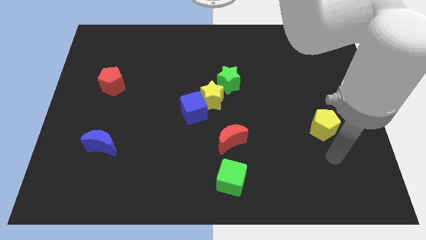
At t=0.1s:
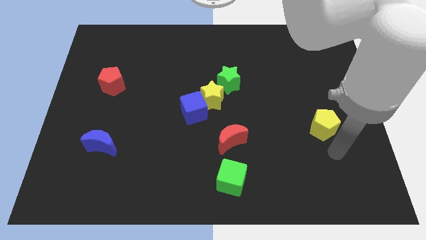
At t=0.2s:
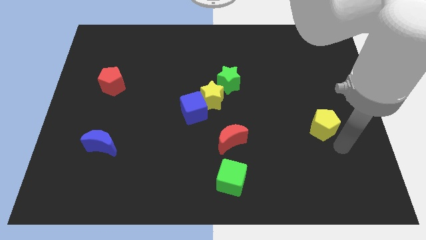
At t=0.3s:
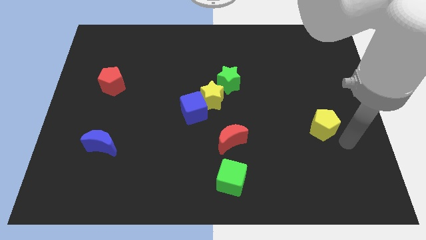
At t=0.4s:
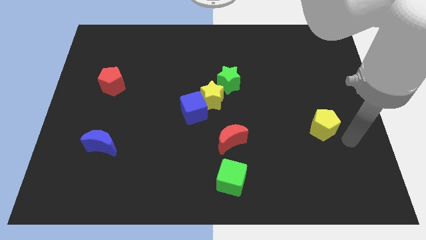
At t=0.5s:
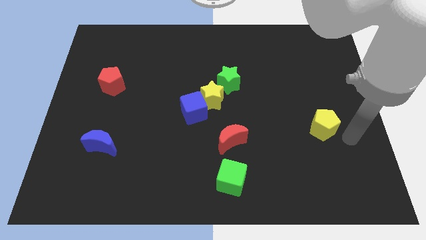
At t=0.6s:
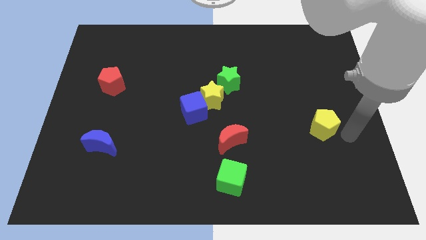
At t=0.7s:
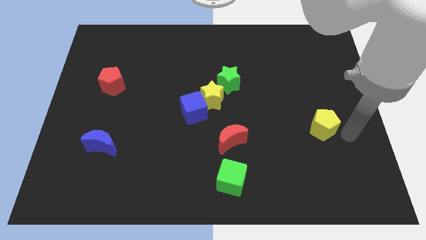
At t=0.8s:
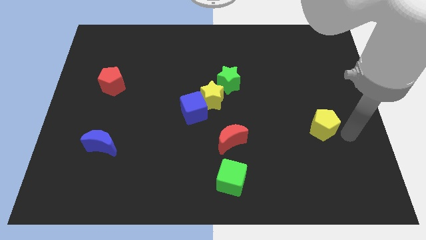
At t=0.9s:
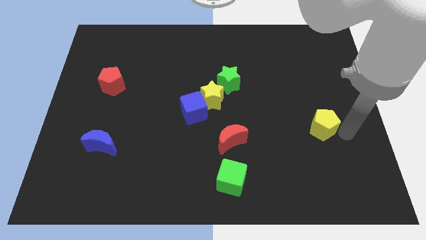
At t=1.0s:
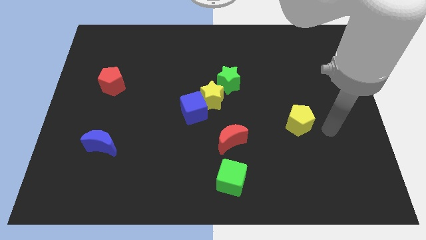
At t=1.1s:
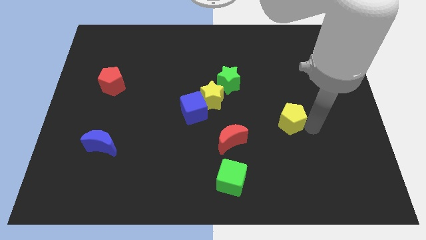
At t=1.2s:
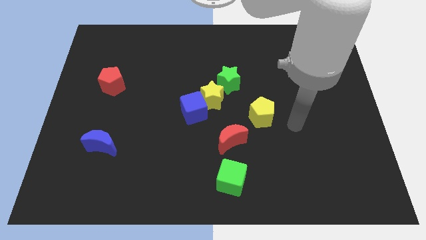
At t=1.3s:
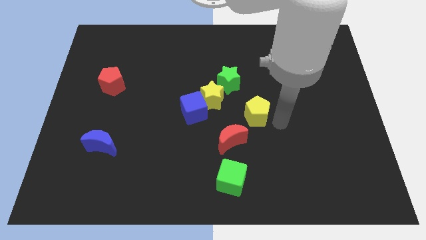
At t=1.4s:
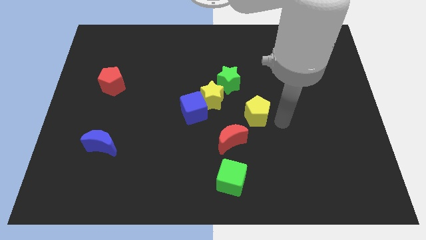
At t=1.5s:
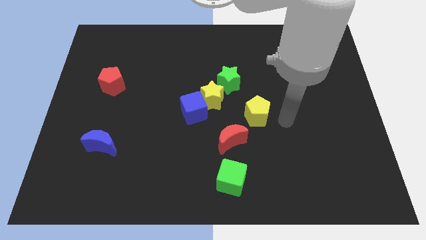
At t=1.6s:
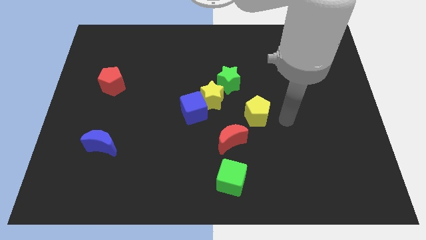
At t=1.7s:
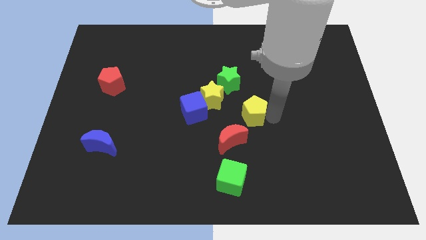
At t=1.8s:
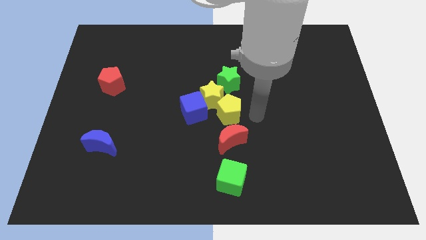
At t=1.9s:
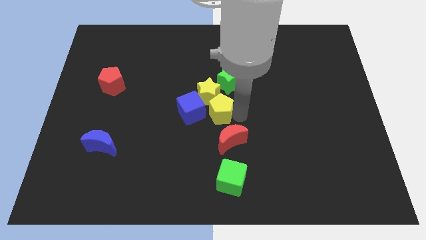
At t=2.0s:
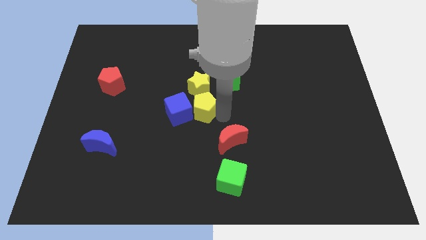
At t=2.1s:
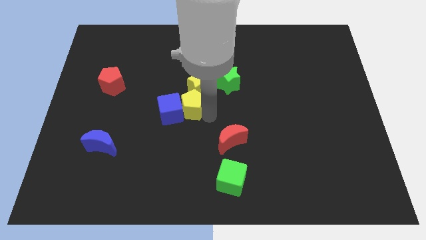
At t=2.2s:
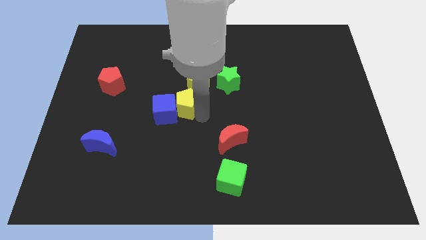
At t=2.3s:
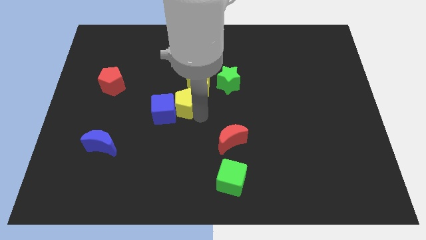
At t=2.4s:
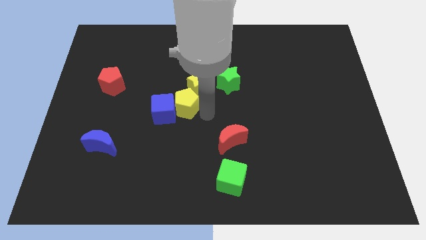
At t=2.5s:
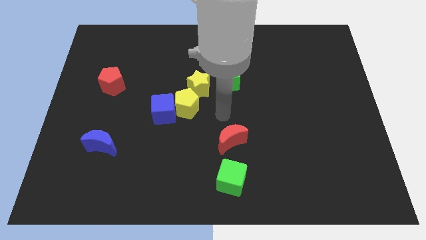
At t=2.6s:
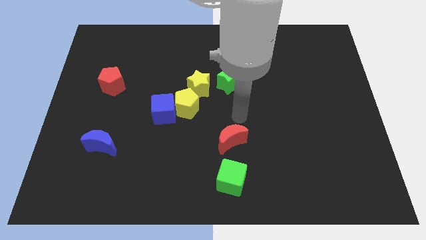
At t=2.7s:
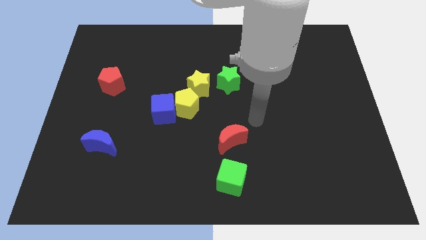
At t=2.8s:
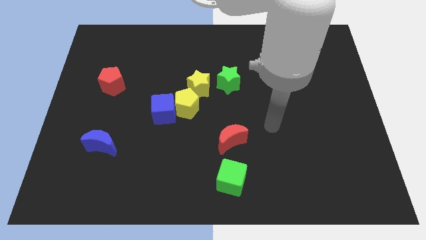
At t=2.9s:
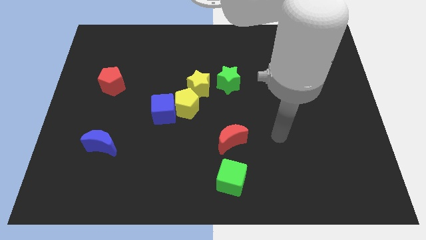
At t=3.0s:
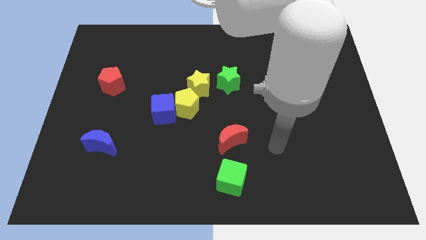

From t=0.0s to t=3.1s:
place the yellow pentagon at the right side of the blue cube

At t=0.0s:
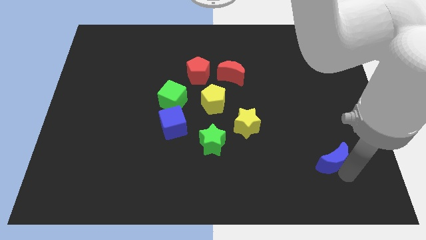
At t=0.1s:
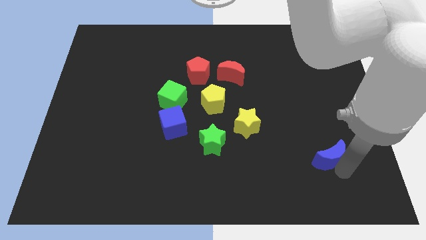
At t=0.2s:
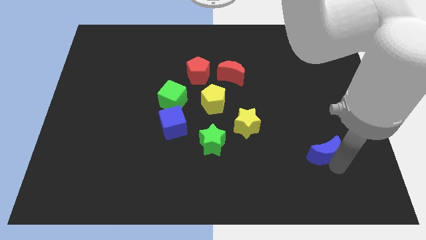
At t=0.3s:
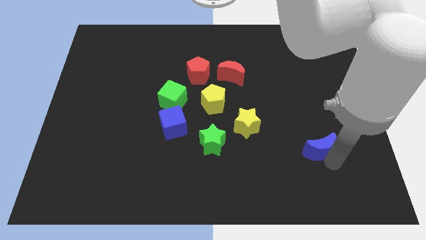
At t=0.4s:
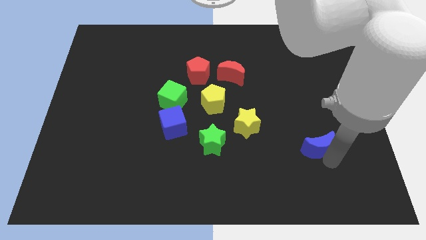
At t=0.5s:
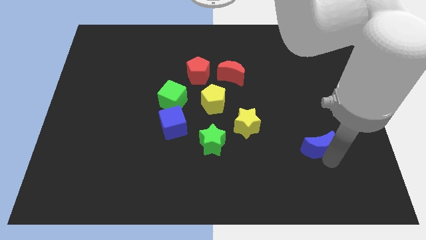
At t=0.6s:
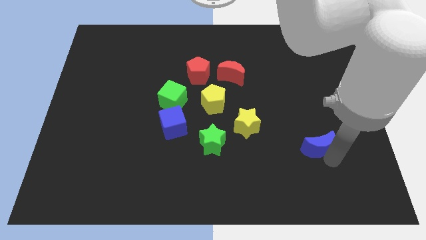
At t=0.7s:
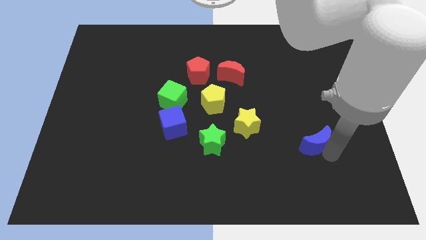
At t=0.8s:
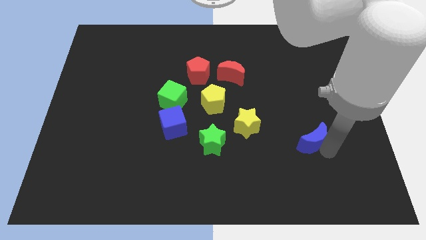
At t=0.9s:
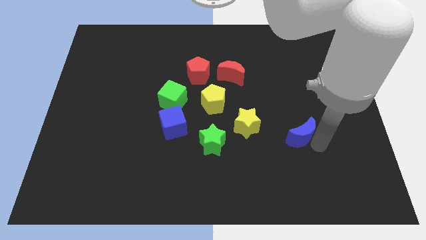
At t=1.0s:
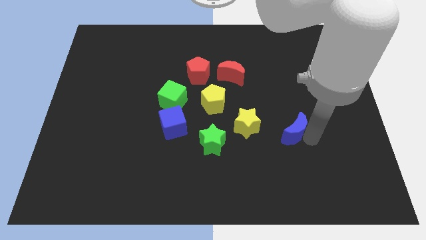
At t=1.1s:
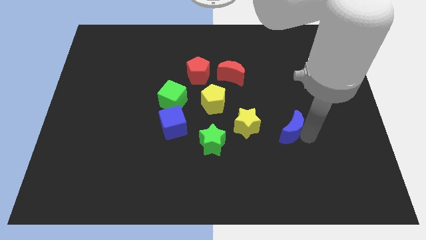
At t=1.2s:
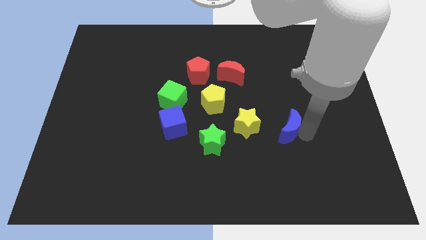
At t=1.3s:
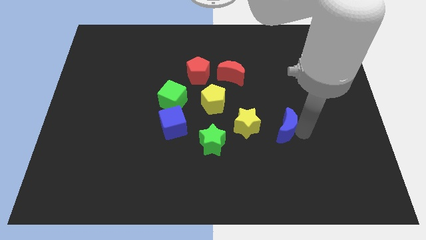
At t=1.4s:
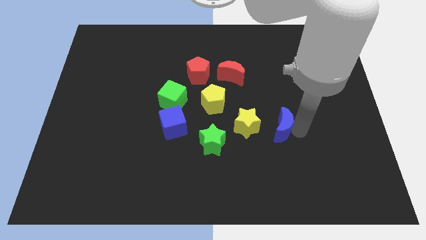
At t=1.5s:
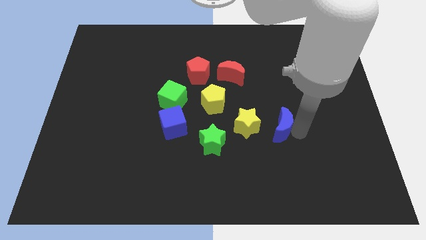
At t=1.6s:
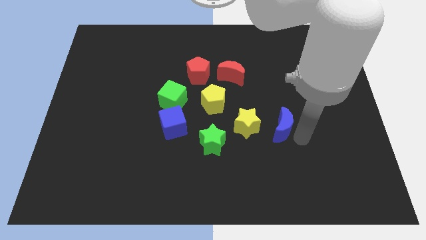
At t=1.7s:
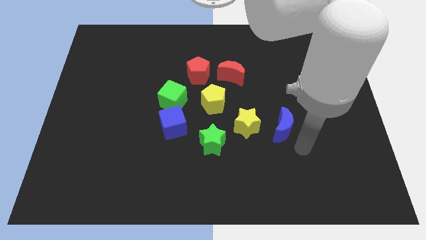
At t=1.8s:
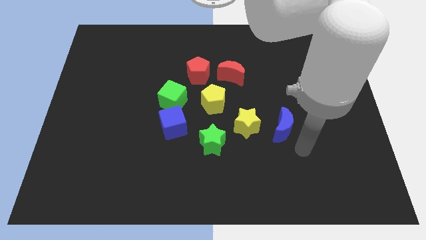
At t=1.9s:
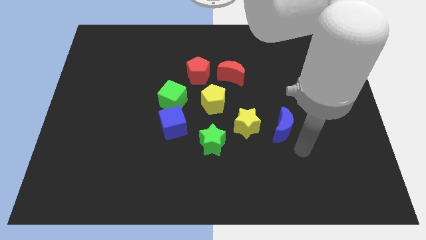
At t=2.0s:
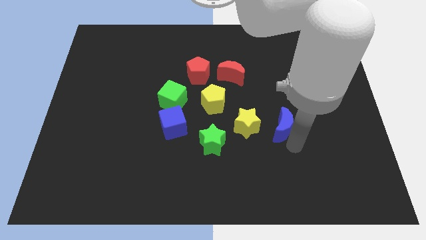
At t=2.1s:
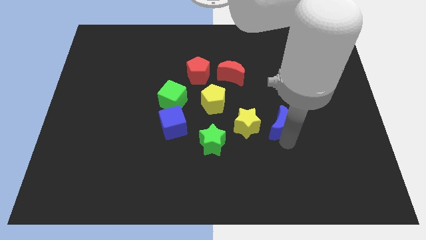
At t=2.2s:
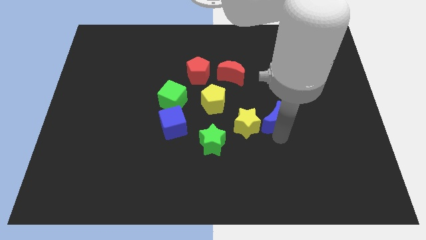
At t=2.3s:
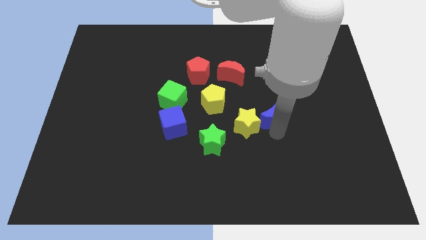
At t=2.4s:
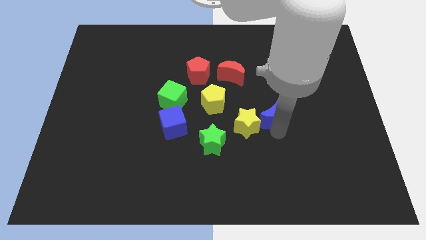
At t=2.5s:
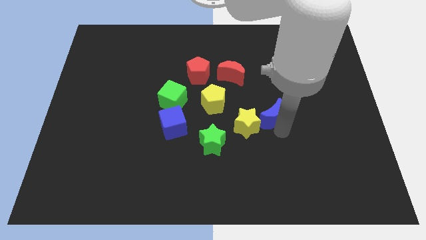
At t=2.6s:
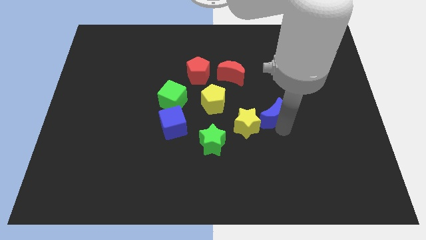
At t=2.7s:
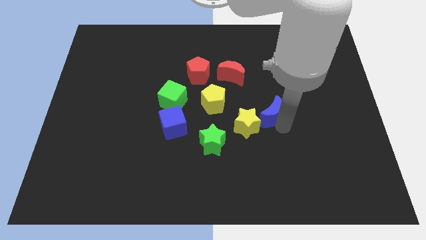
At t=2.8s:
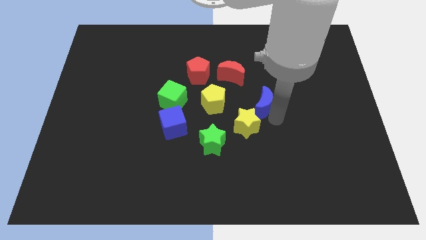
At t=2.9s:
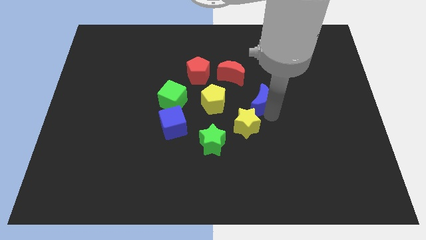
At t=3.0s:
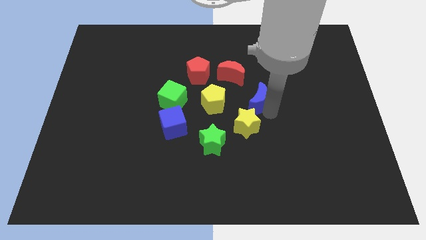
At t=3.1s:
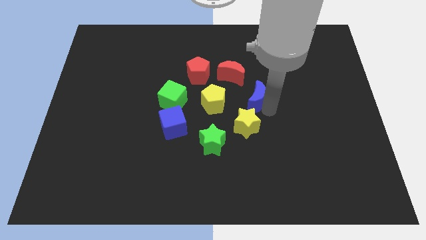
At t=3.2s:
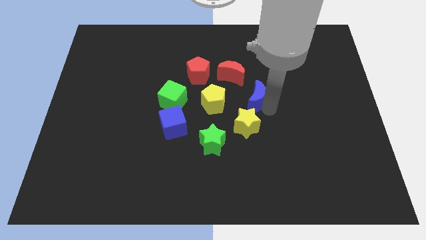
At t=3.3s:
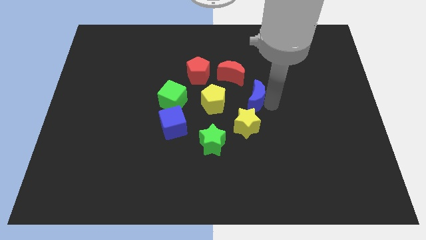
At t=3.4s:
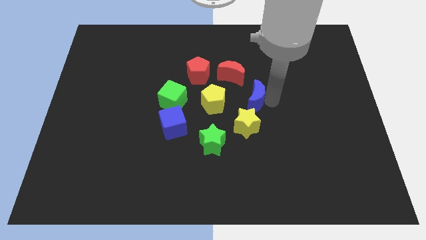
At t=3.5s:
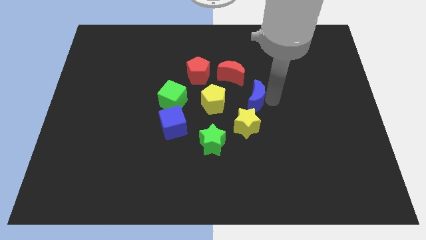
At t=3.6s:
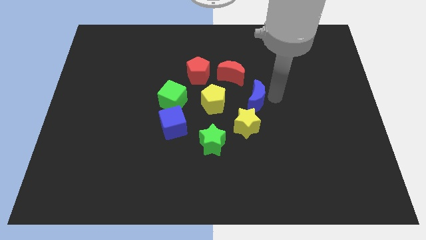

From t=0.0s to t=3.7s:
push the blue moon above the yellow star

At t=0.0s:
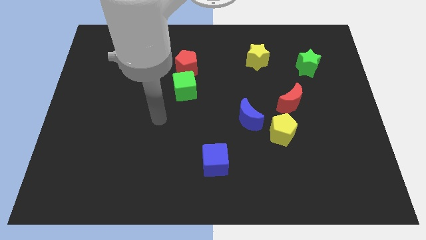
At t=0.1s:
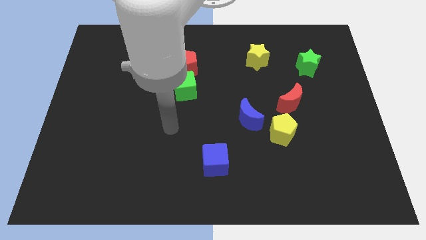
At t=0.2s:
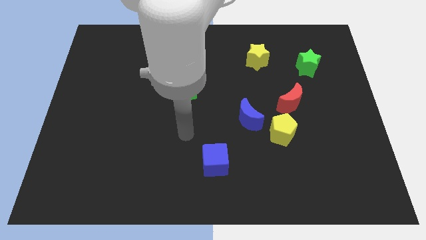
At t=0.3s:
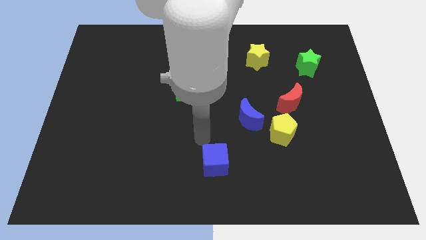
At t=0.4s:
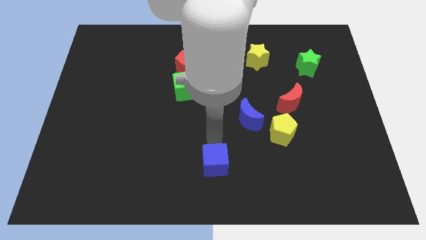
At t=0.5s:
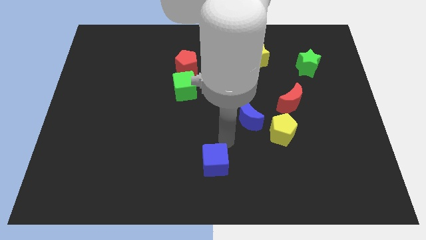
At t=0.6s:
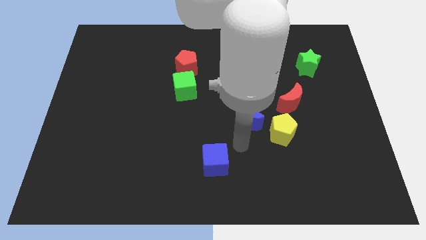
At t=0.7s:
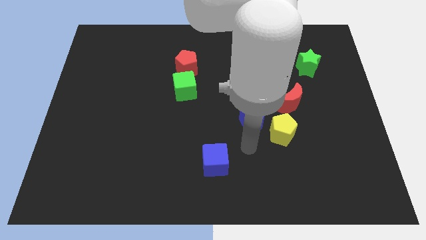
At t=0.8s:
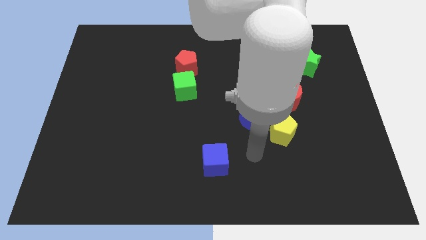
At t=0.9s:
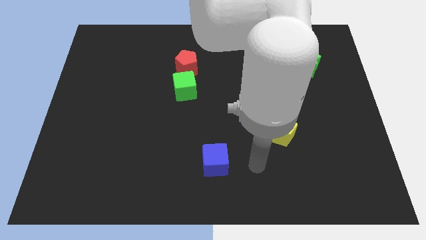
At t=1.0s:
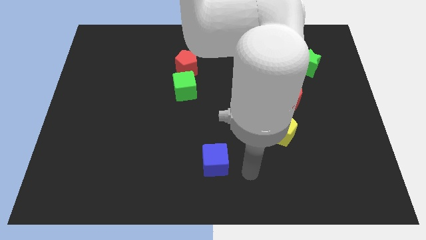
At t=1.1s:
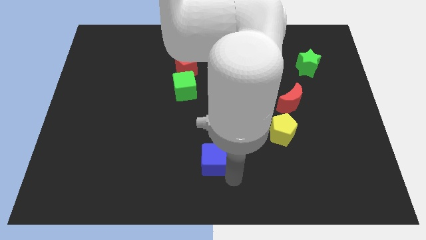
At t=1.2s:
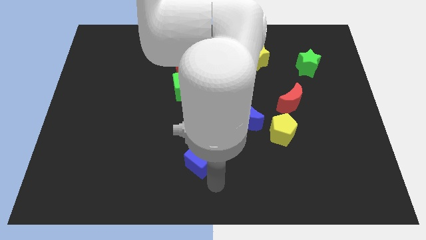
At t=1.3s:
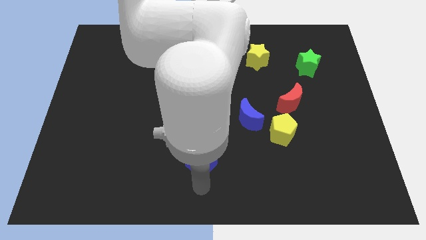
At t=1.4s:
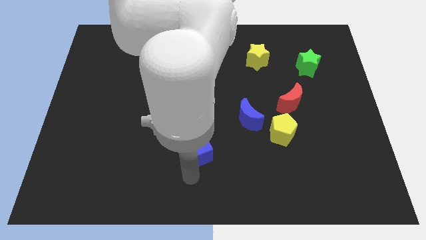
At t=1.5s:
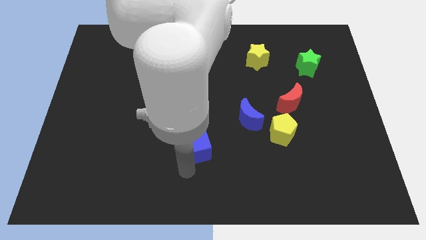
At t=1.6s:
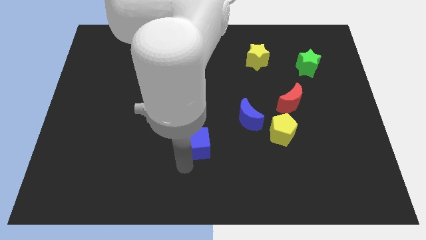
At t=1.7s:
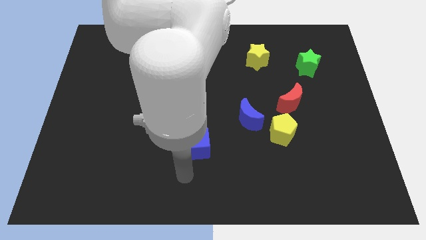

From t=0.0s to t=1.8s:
move the blue cube slightly upwards

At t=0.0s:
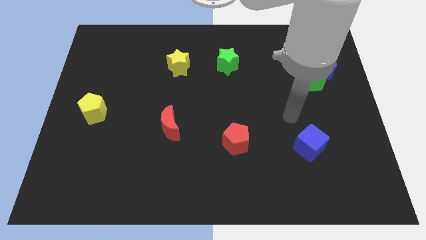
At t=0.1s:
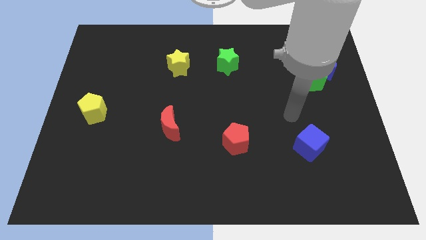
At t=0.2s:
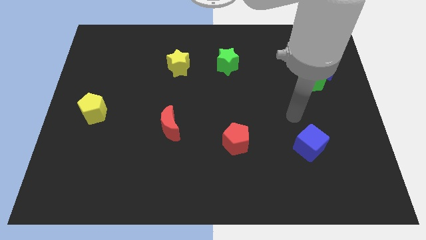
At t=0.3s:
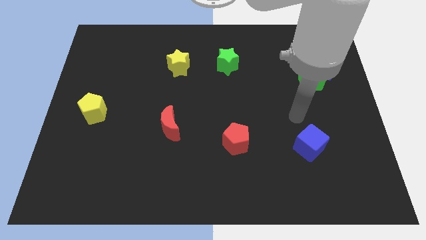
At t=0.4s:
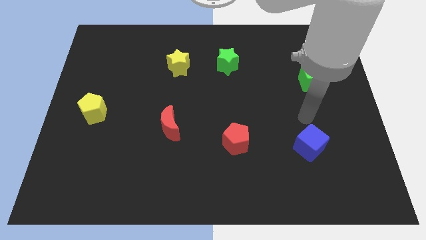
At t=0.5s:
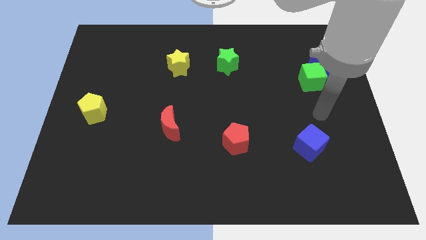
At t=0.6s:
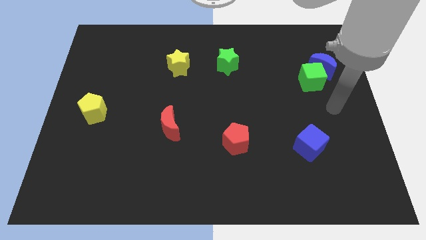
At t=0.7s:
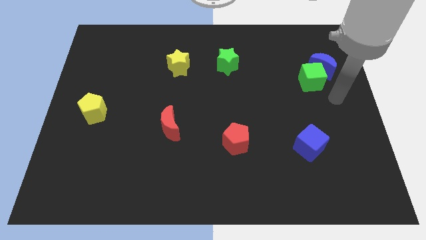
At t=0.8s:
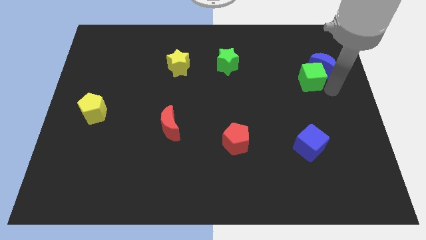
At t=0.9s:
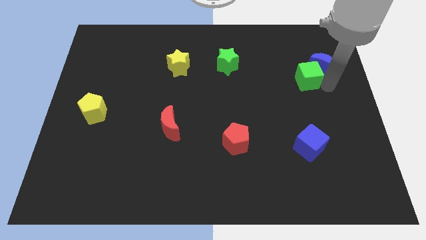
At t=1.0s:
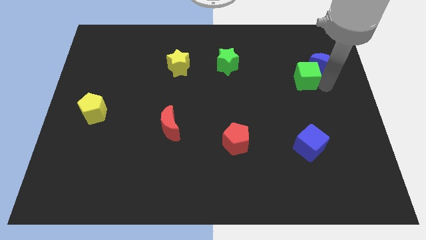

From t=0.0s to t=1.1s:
touch the bottom of green cube
